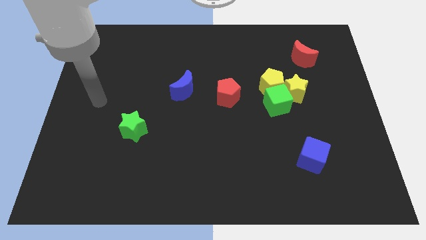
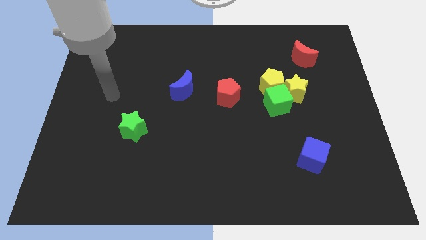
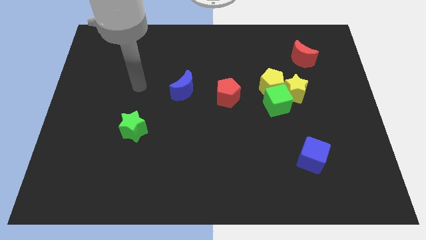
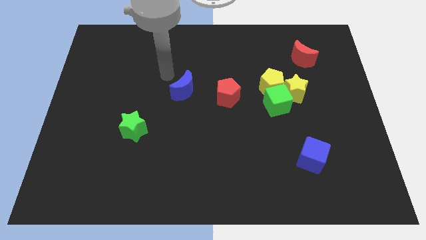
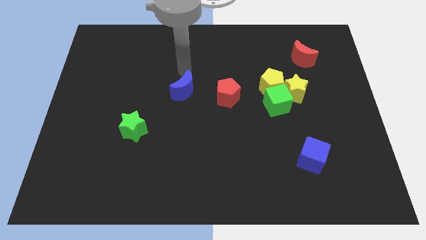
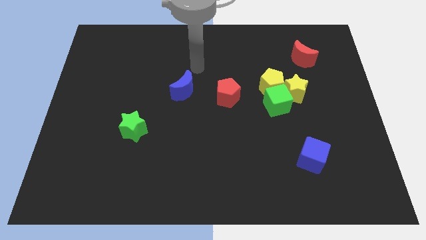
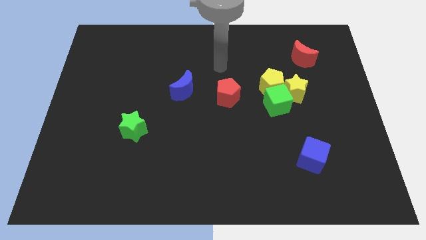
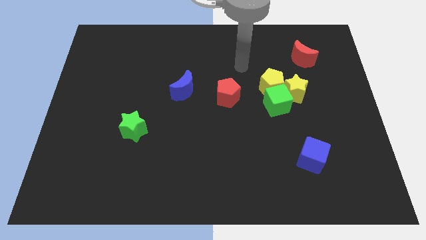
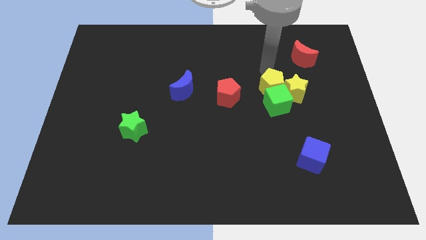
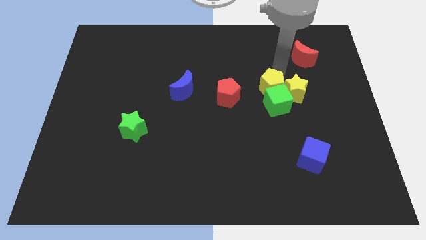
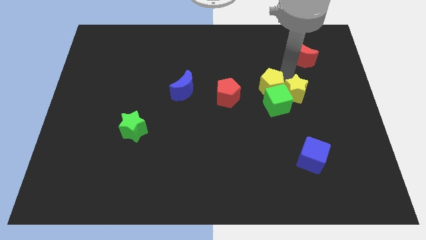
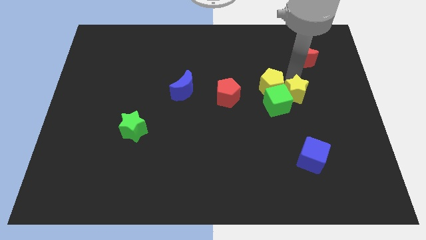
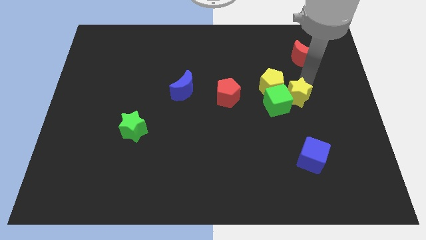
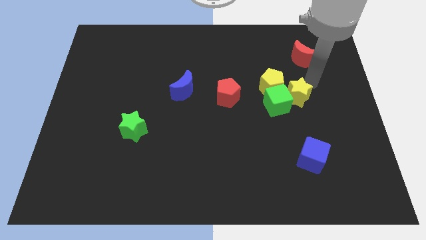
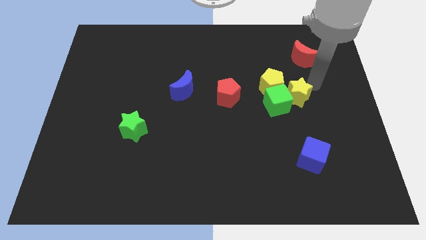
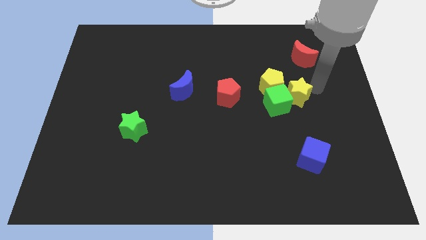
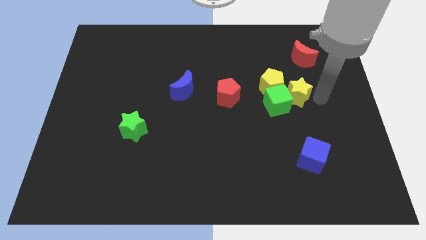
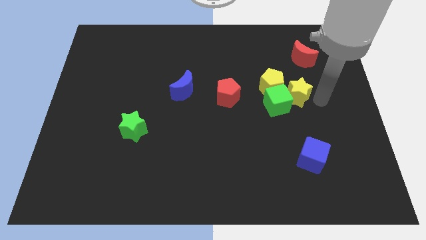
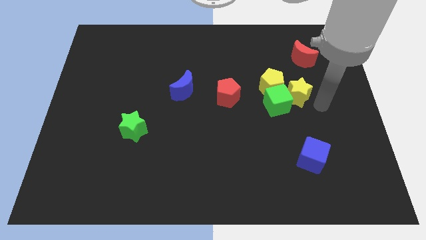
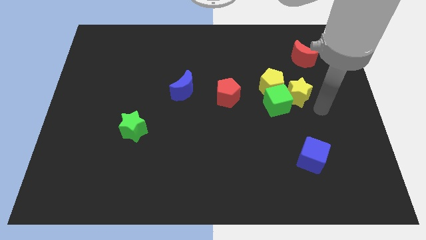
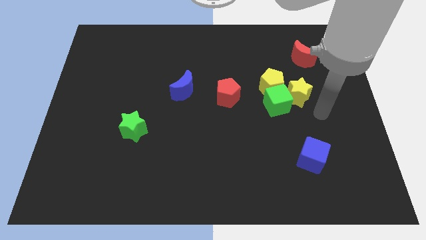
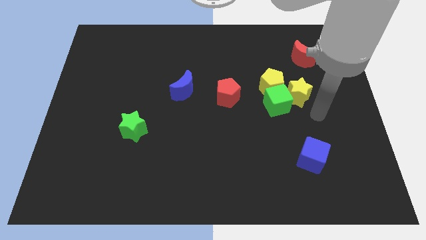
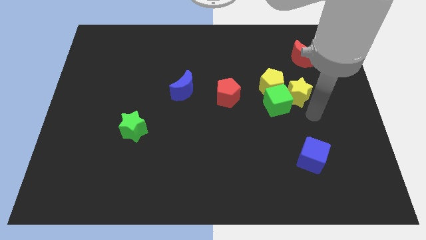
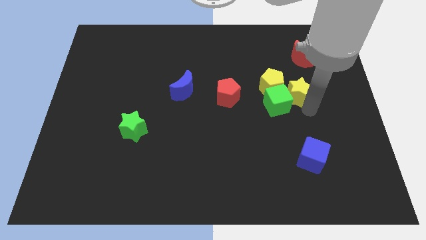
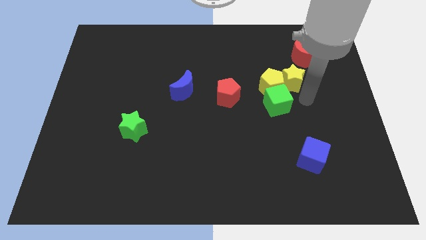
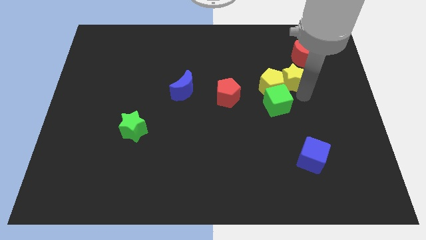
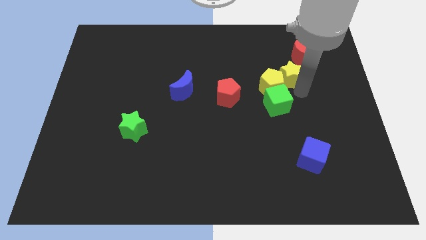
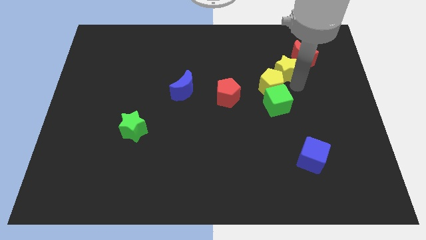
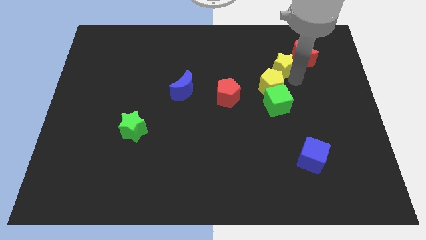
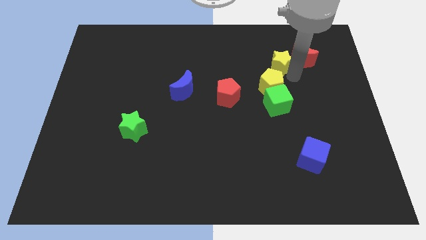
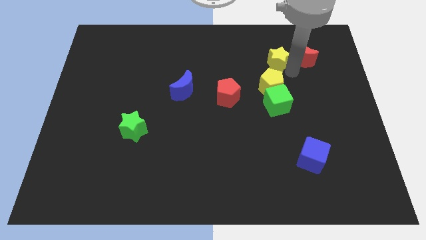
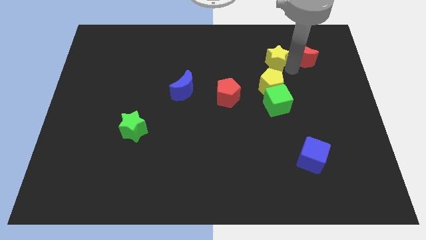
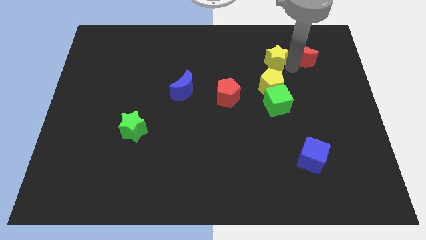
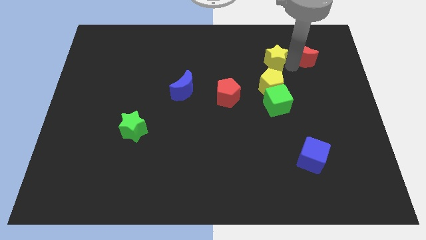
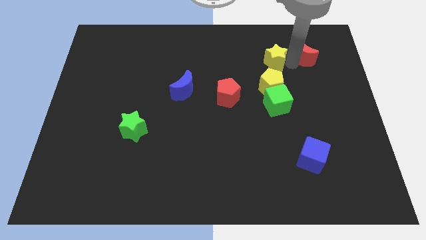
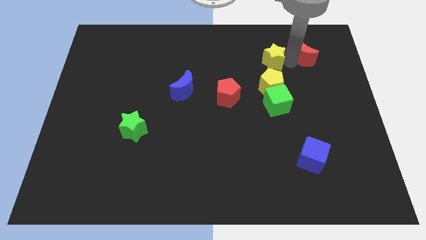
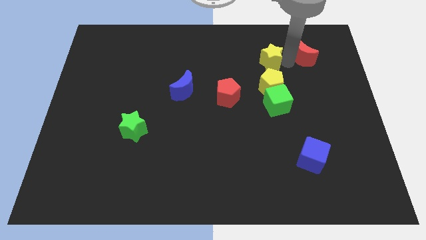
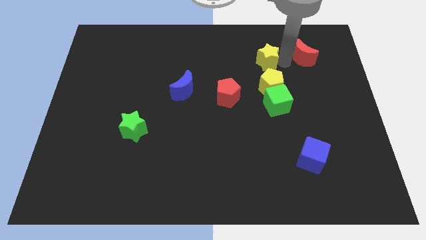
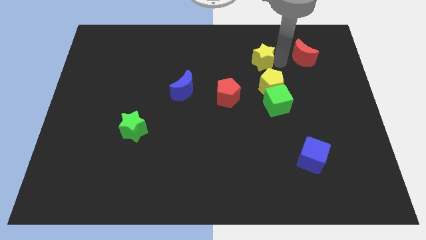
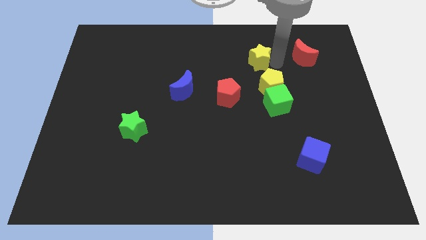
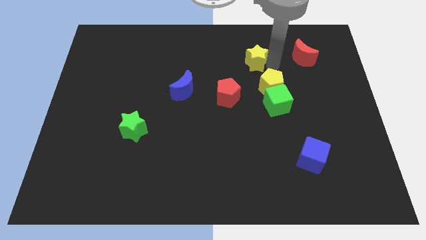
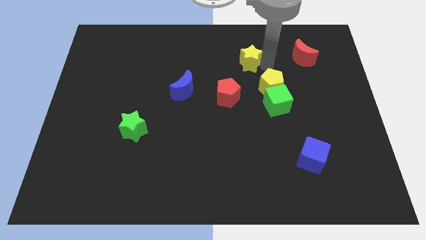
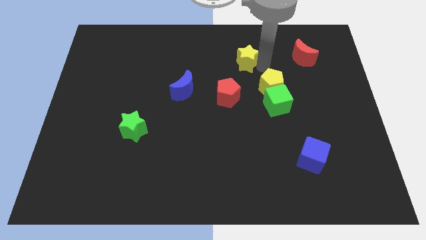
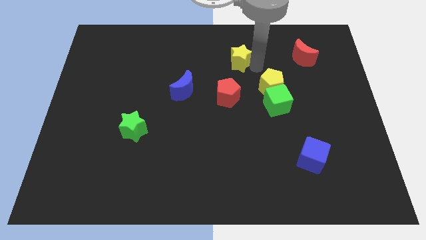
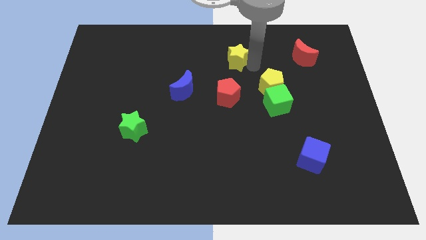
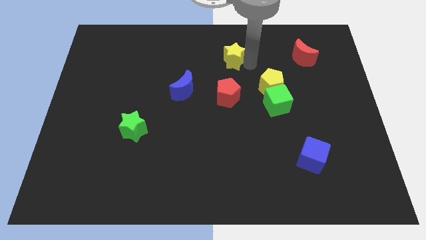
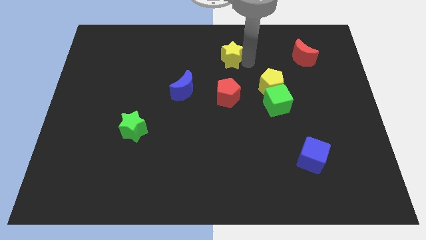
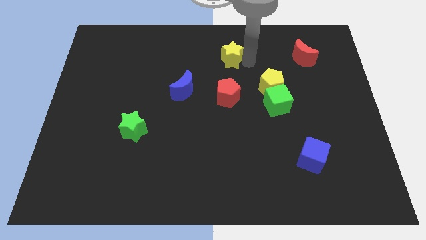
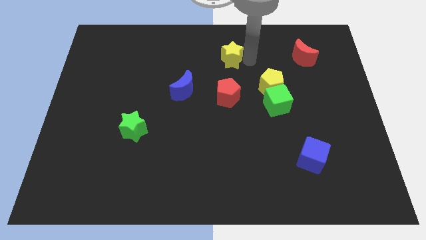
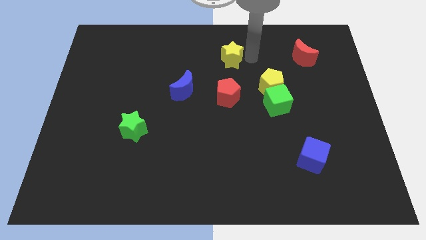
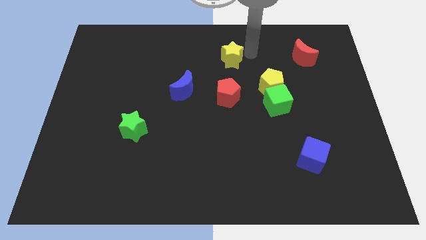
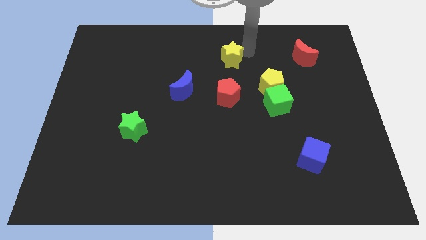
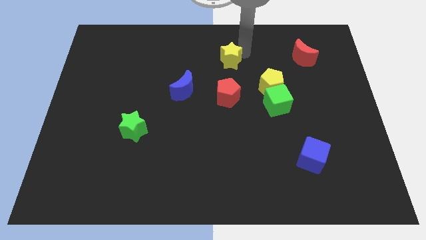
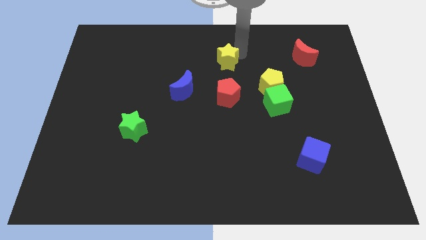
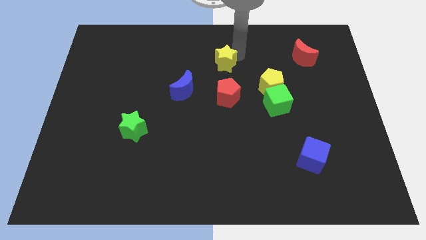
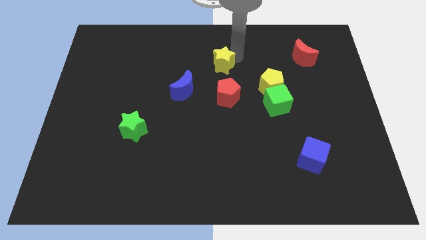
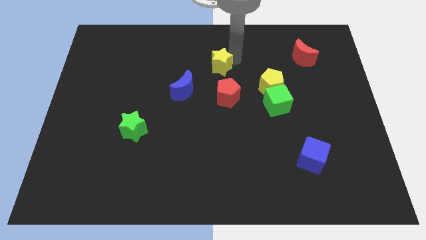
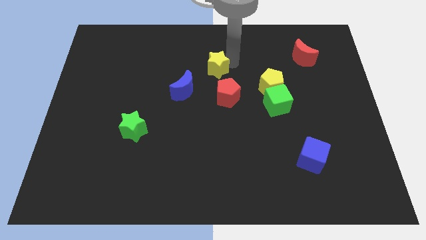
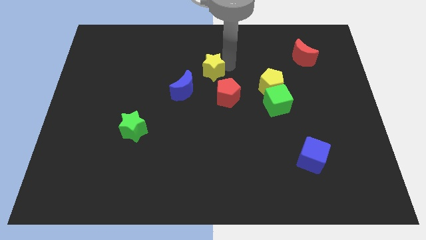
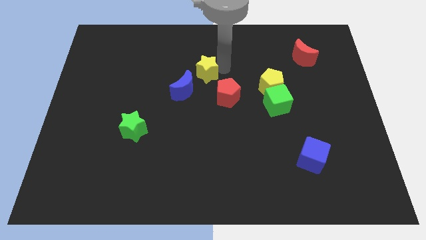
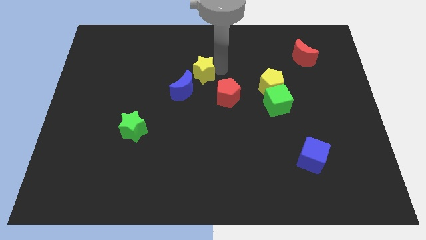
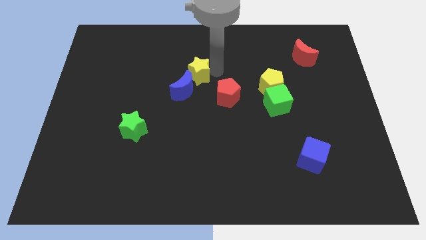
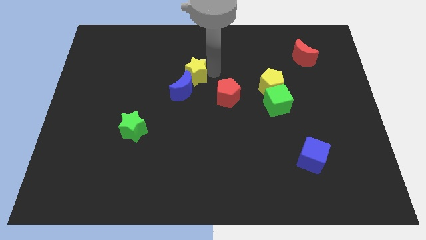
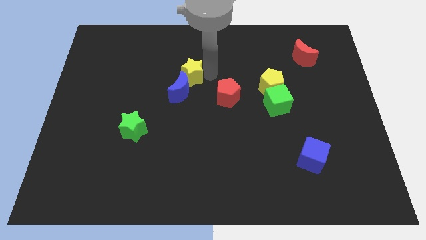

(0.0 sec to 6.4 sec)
put the yellow star close to the blue moon

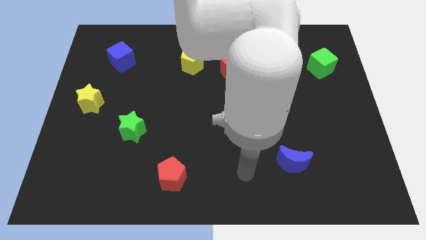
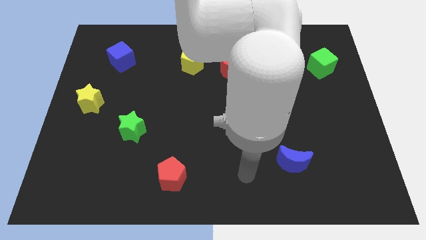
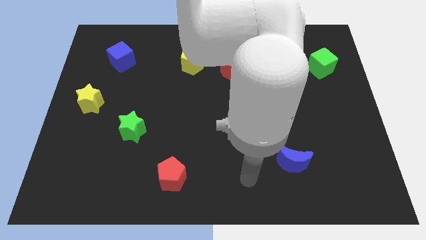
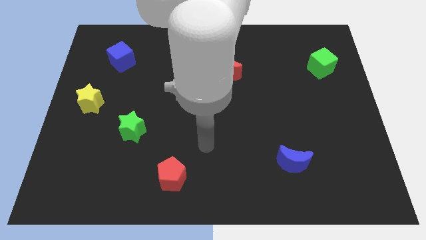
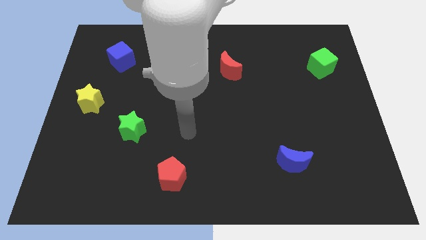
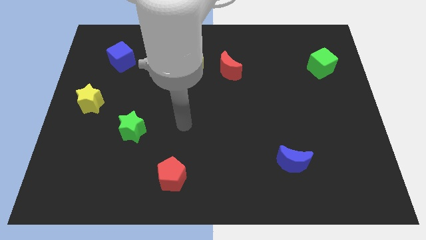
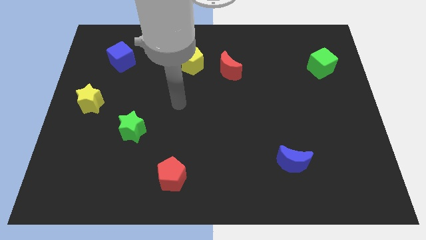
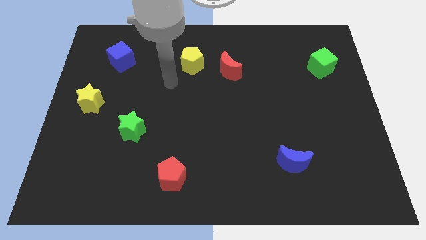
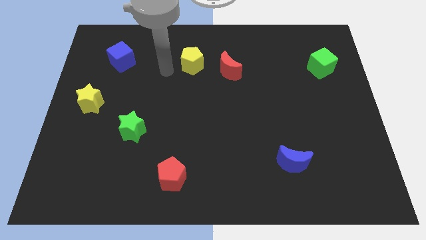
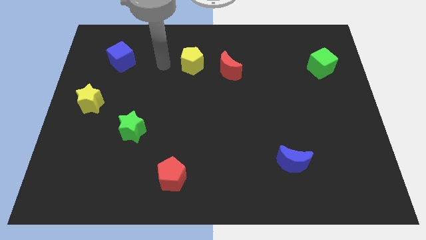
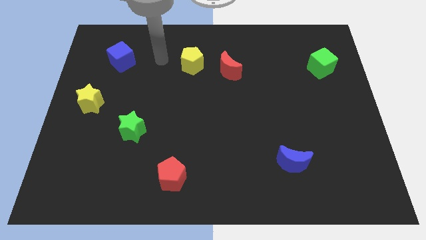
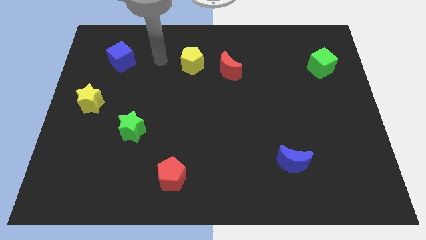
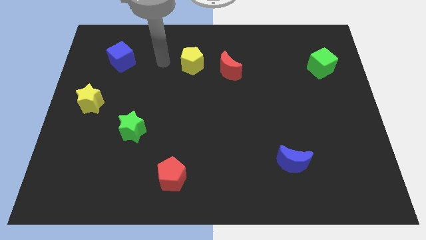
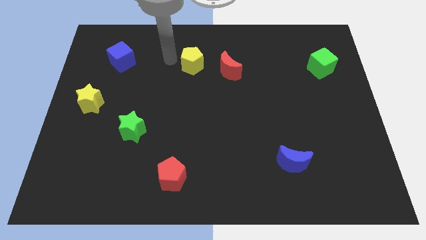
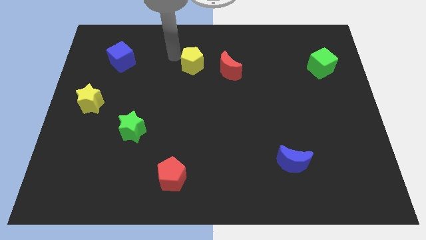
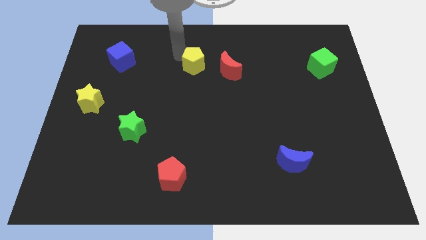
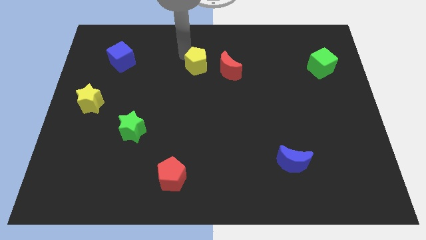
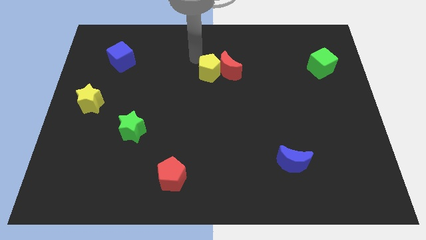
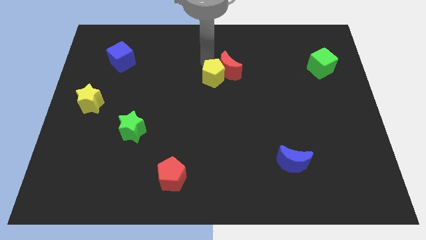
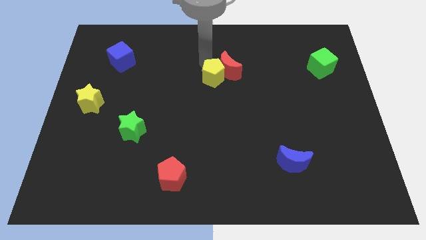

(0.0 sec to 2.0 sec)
slide the yellow pentagon towards the red moon

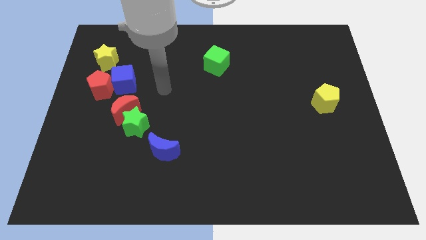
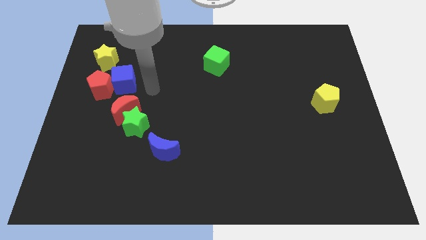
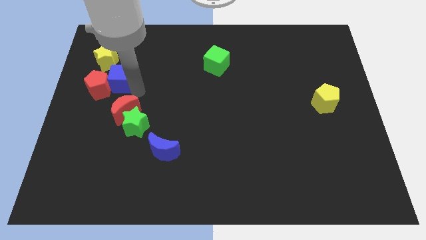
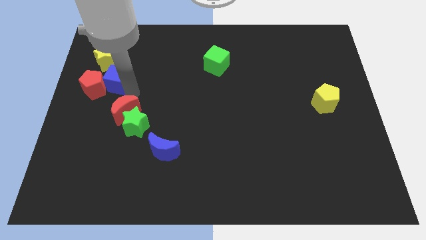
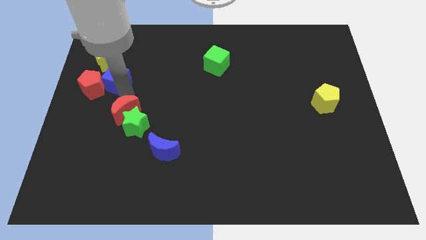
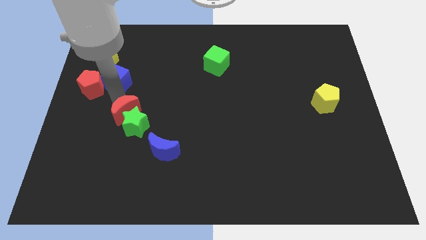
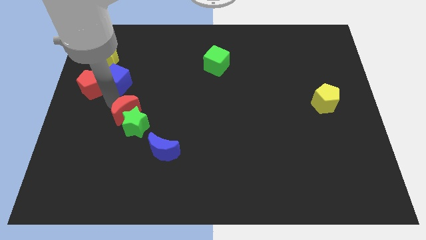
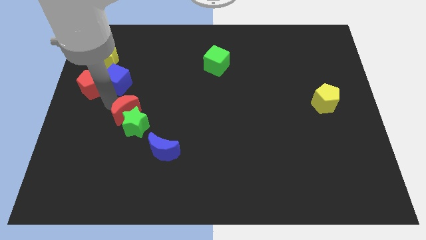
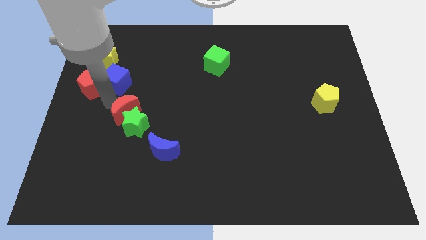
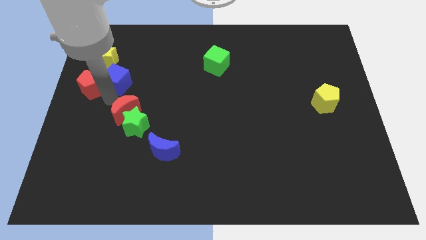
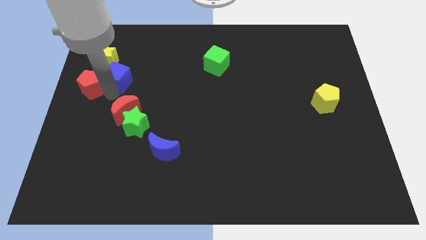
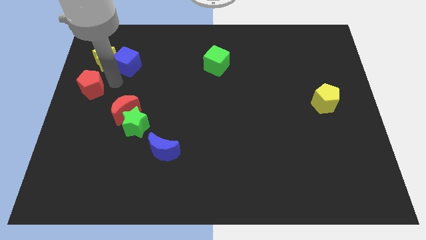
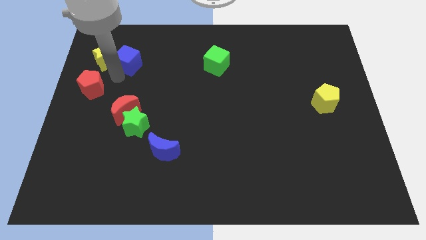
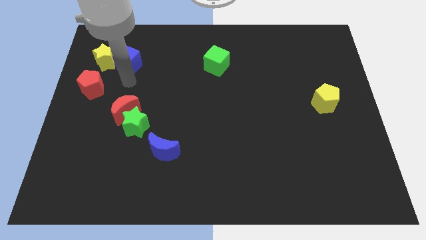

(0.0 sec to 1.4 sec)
move the blue cube towards the yellow star
